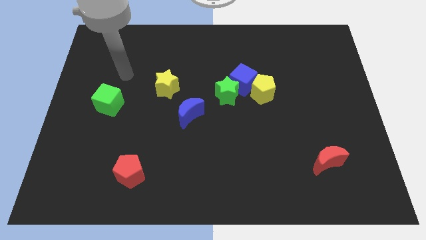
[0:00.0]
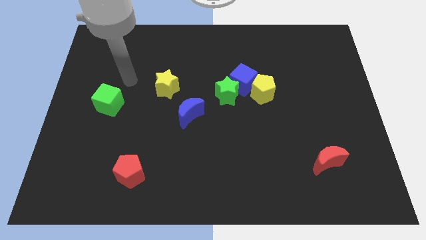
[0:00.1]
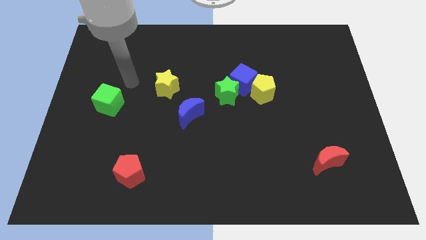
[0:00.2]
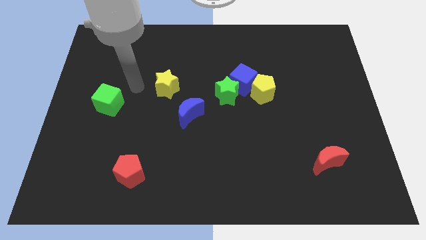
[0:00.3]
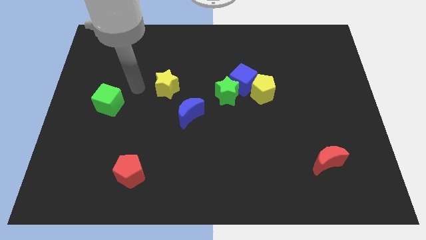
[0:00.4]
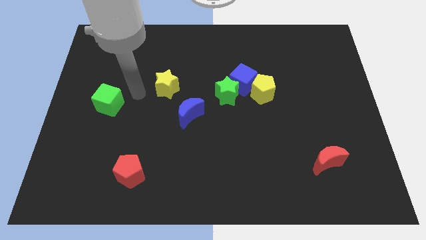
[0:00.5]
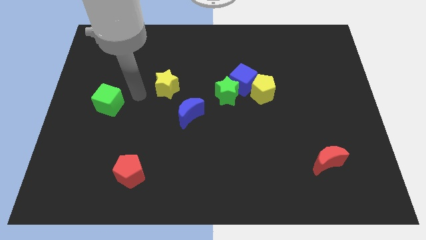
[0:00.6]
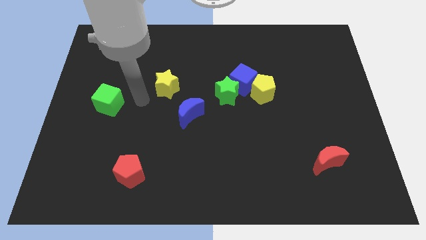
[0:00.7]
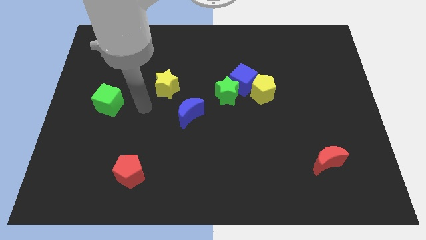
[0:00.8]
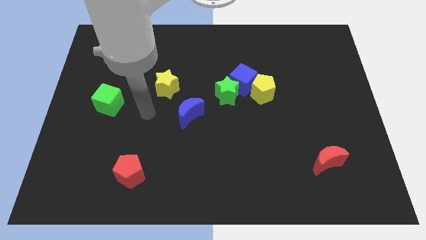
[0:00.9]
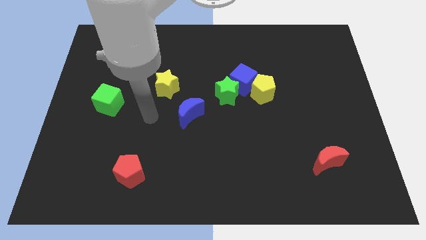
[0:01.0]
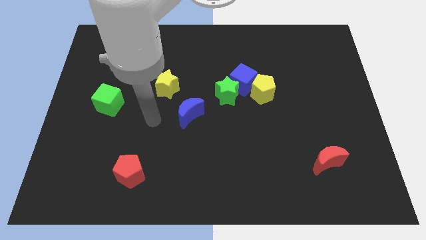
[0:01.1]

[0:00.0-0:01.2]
move your arm towards the bottom side of the yellow star

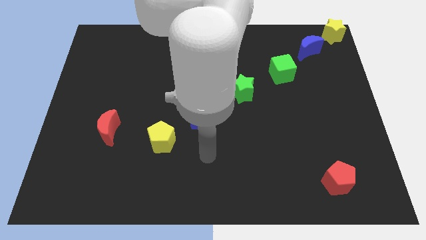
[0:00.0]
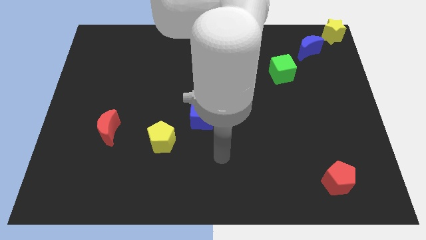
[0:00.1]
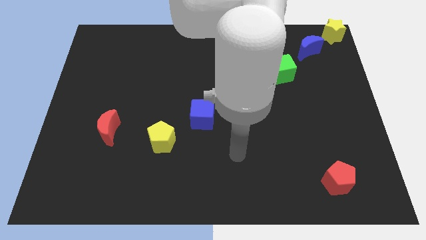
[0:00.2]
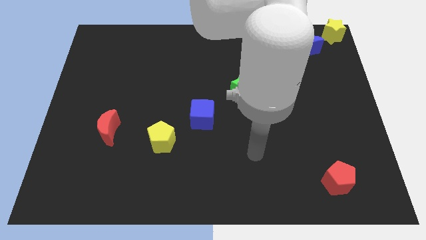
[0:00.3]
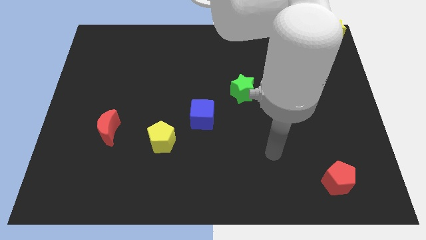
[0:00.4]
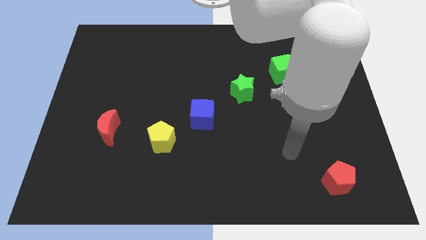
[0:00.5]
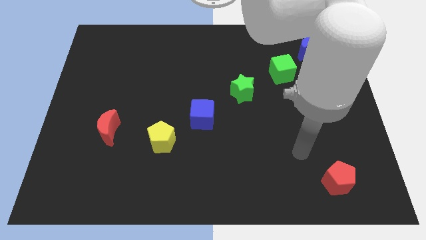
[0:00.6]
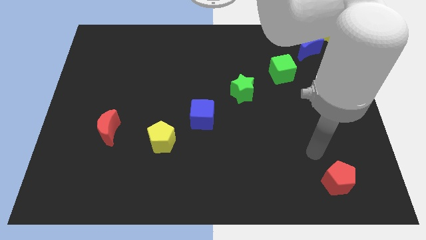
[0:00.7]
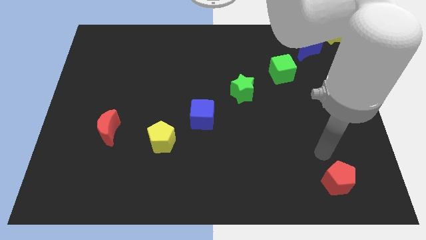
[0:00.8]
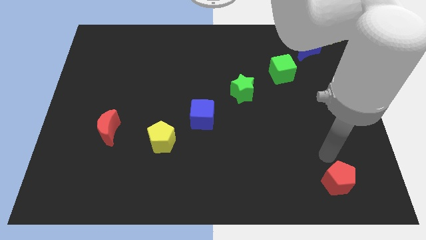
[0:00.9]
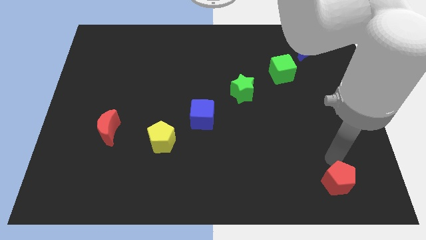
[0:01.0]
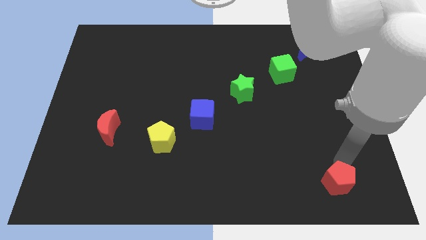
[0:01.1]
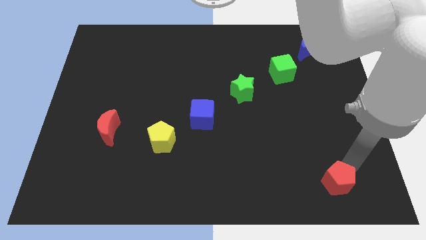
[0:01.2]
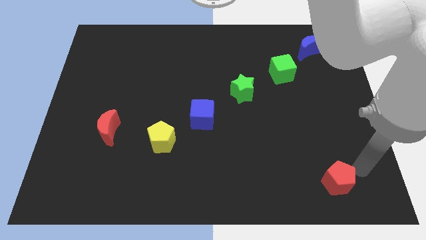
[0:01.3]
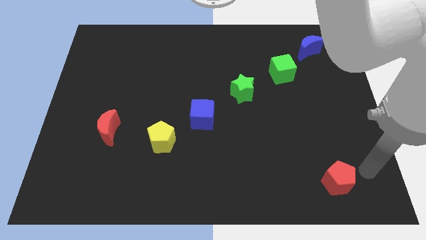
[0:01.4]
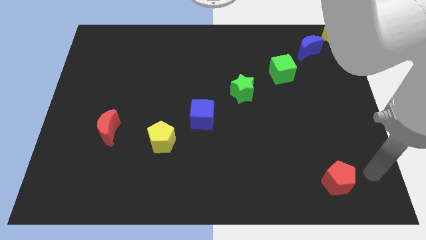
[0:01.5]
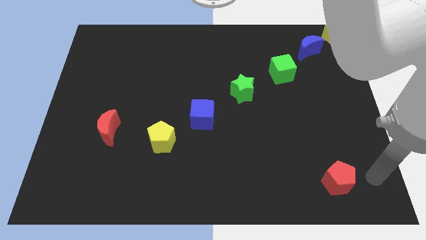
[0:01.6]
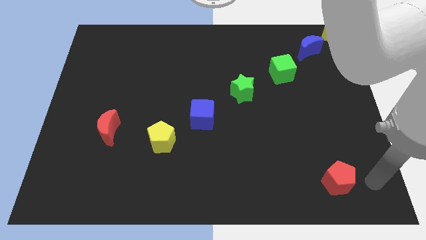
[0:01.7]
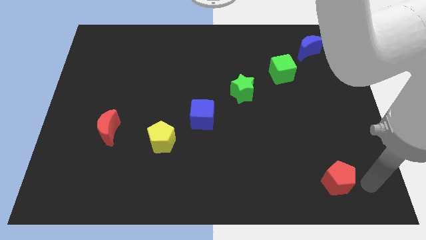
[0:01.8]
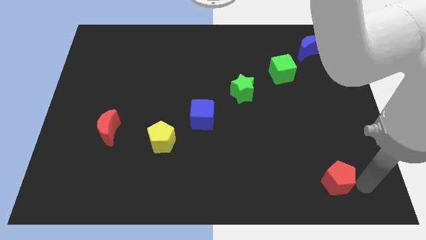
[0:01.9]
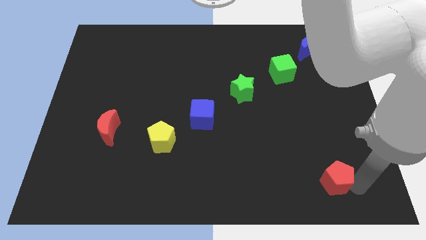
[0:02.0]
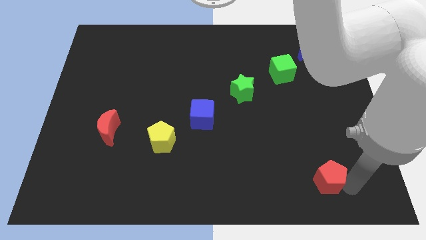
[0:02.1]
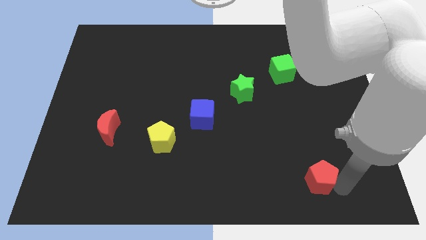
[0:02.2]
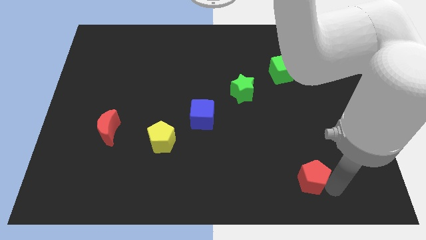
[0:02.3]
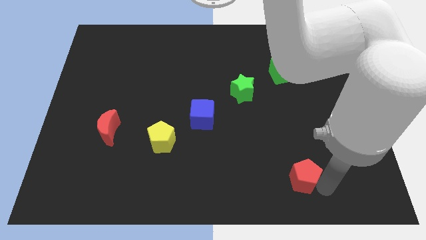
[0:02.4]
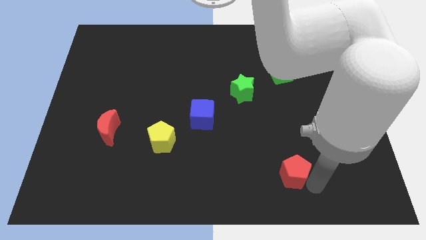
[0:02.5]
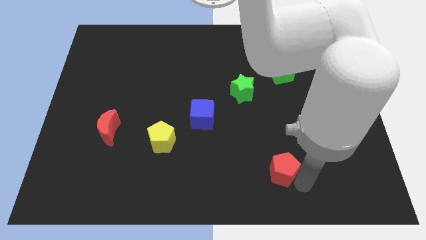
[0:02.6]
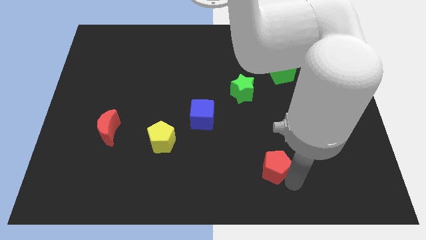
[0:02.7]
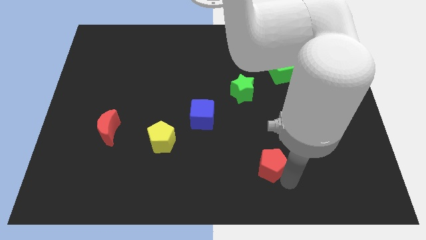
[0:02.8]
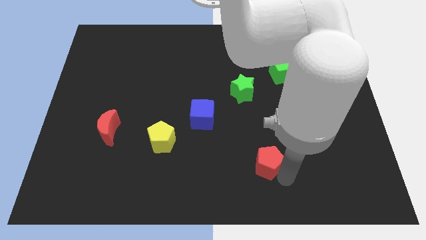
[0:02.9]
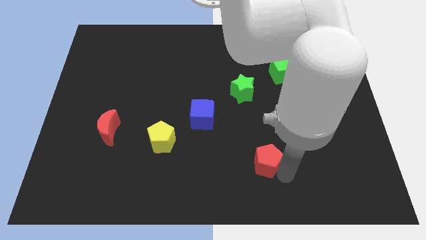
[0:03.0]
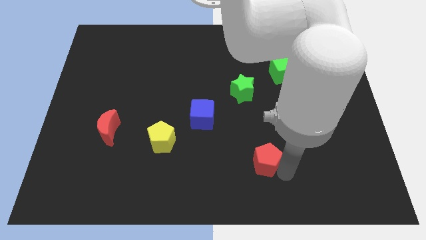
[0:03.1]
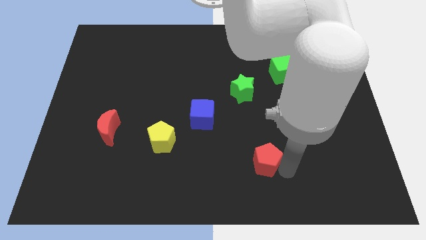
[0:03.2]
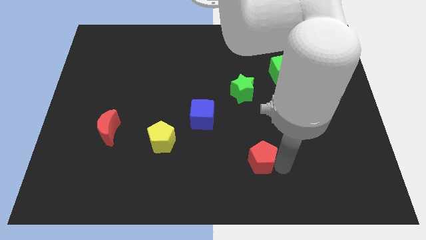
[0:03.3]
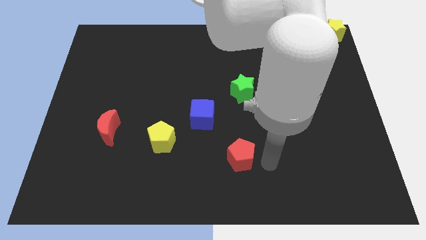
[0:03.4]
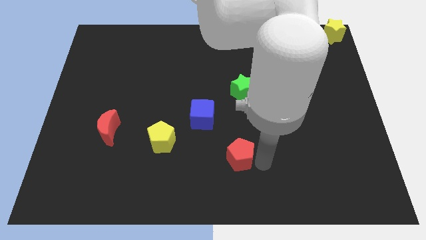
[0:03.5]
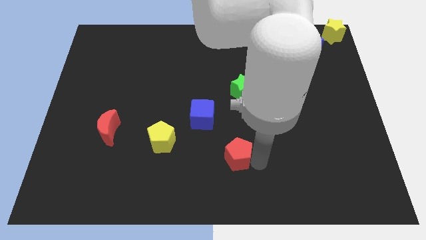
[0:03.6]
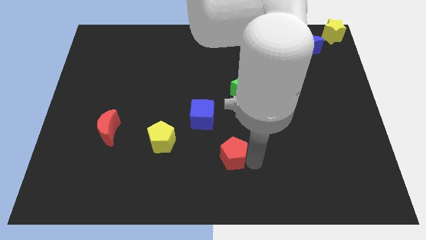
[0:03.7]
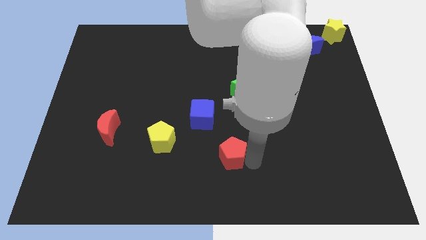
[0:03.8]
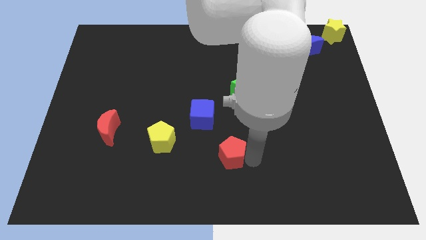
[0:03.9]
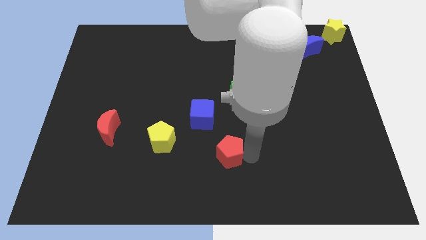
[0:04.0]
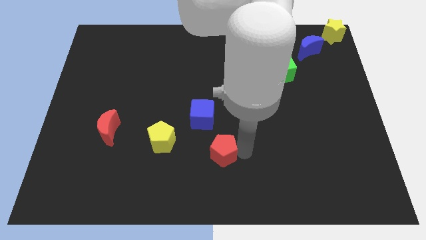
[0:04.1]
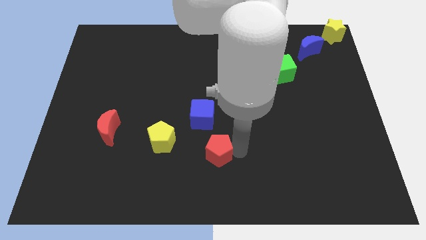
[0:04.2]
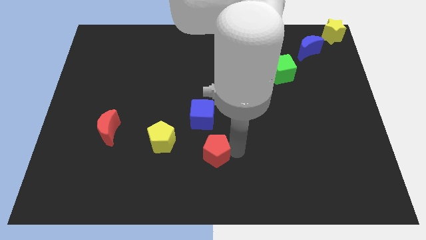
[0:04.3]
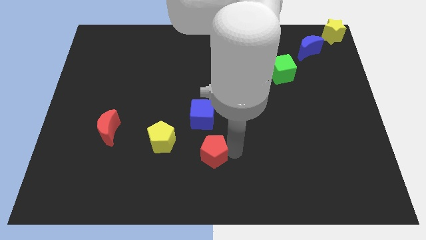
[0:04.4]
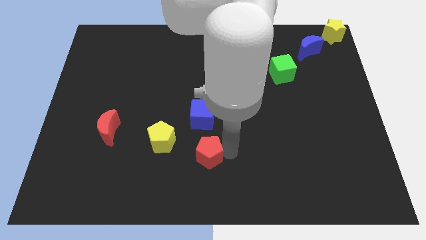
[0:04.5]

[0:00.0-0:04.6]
push red pentagon below blue cube

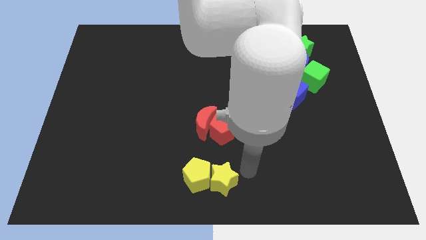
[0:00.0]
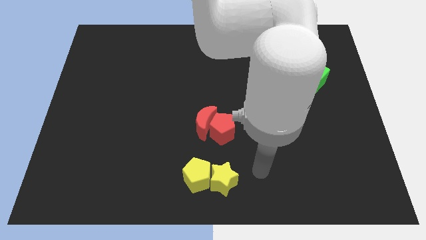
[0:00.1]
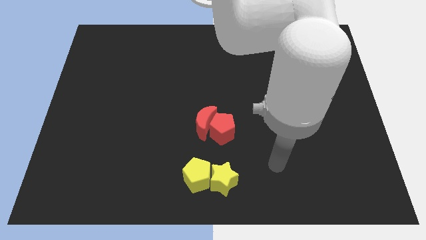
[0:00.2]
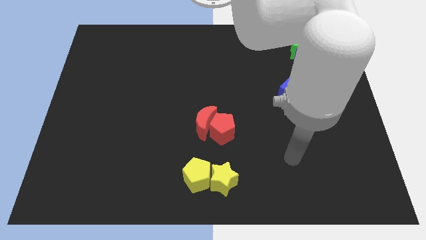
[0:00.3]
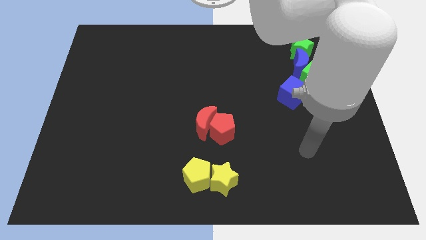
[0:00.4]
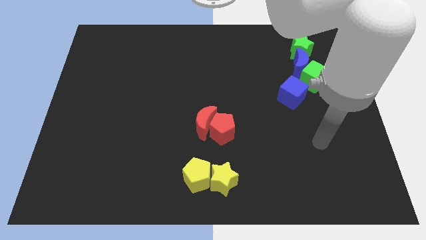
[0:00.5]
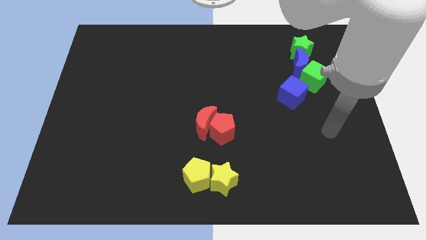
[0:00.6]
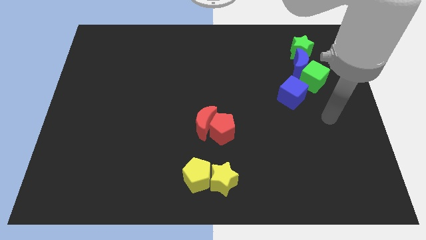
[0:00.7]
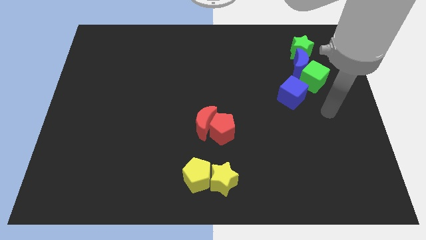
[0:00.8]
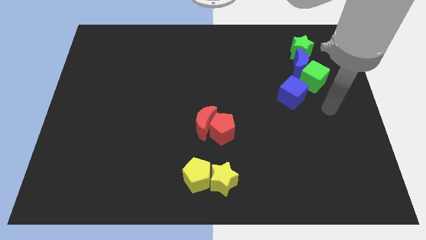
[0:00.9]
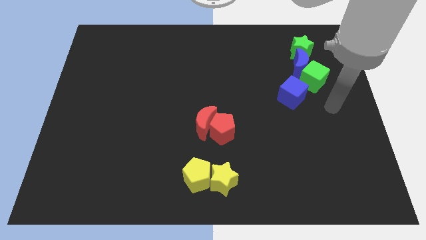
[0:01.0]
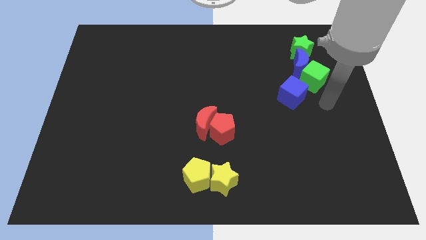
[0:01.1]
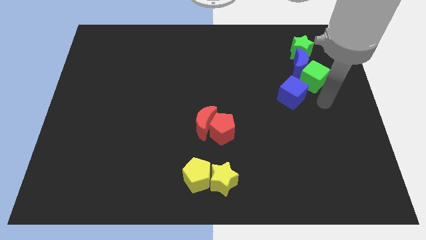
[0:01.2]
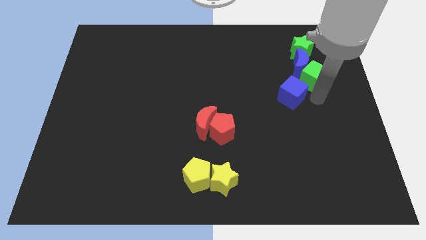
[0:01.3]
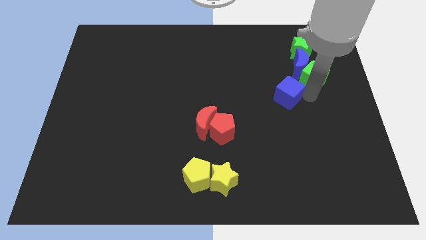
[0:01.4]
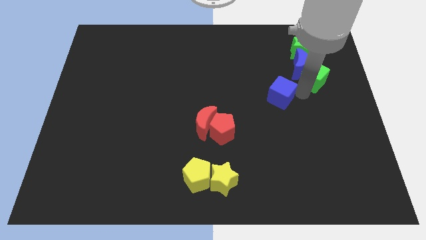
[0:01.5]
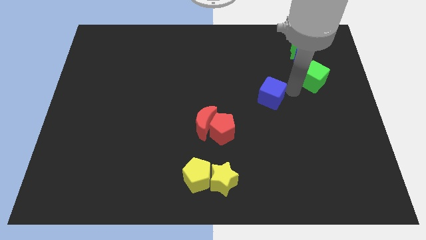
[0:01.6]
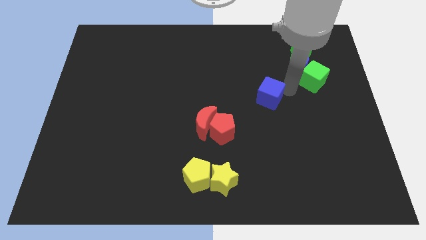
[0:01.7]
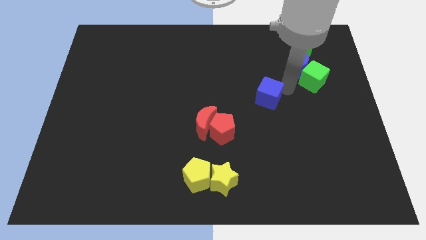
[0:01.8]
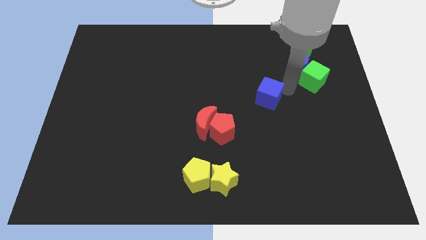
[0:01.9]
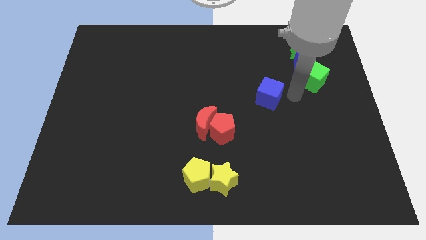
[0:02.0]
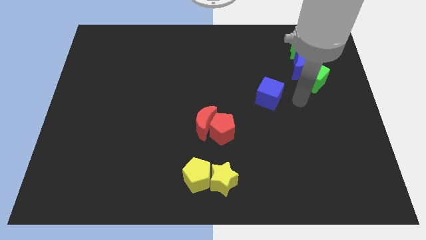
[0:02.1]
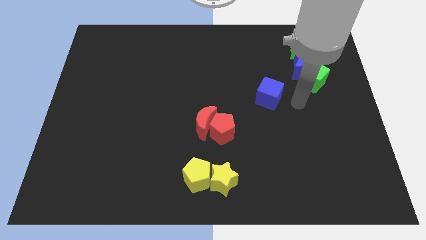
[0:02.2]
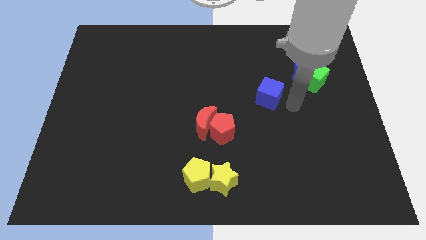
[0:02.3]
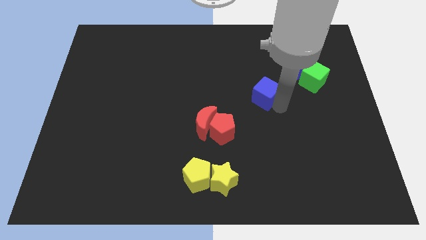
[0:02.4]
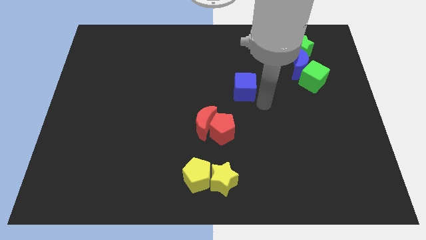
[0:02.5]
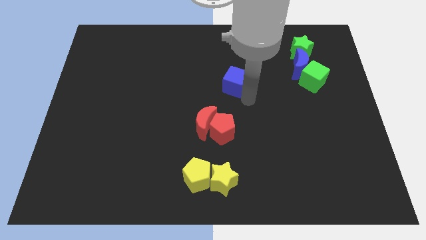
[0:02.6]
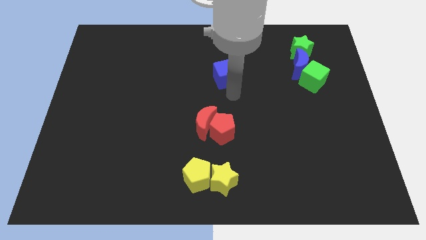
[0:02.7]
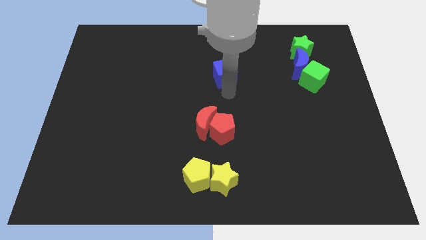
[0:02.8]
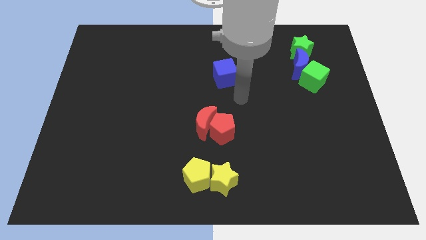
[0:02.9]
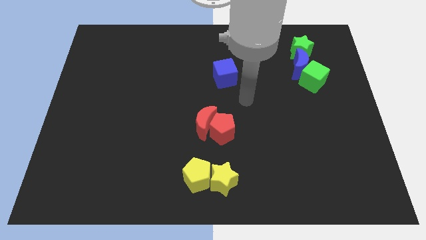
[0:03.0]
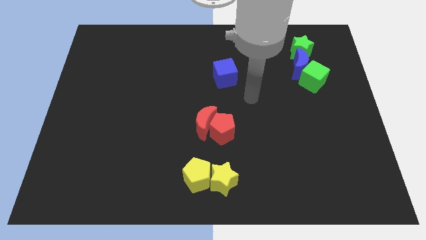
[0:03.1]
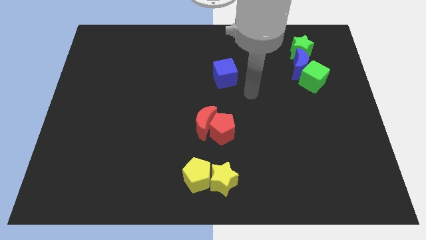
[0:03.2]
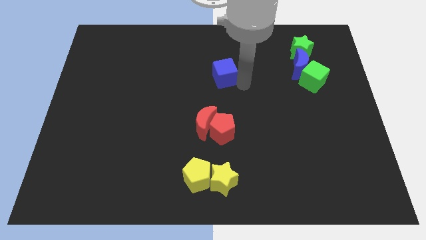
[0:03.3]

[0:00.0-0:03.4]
place the blue cube above the red moon
